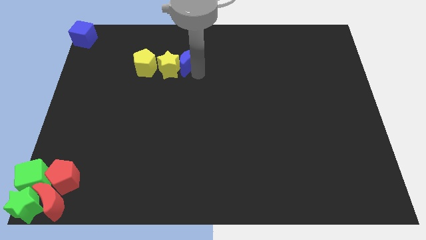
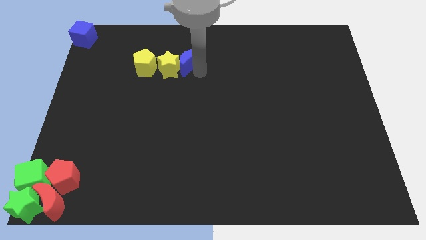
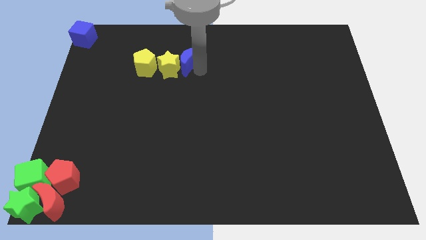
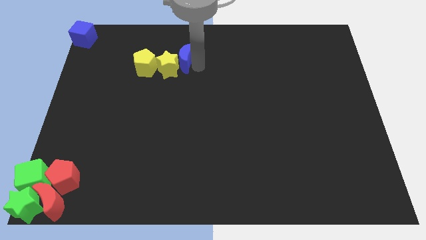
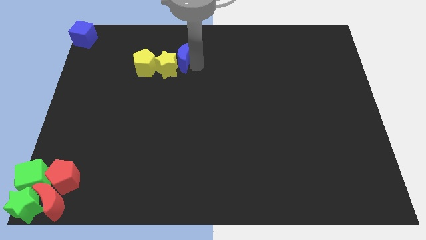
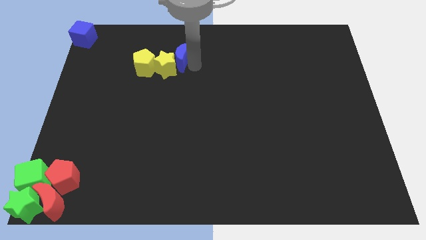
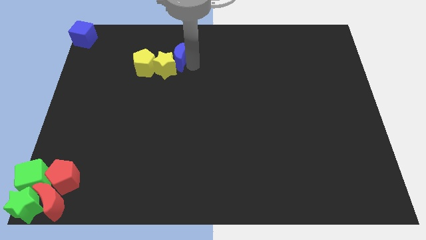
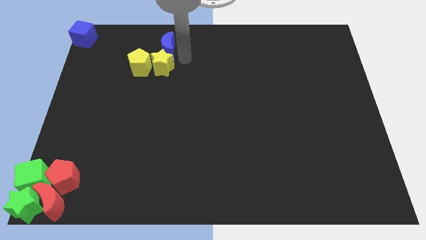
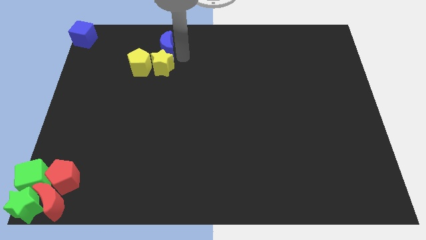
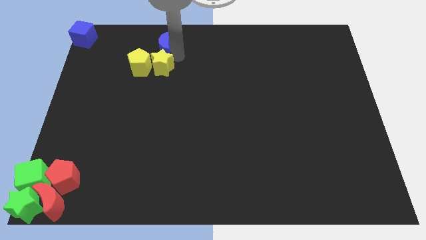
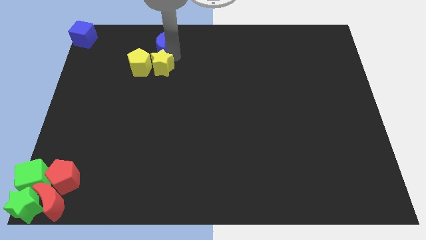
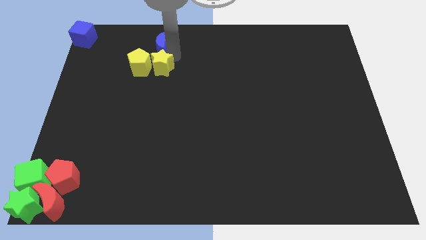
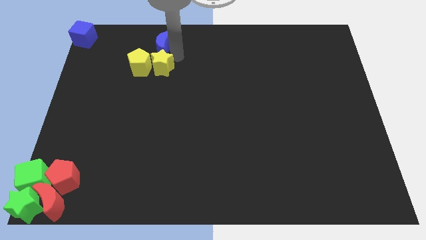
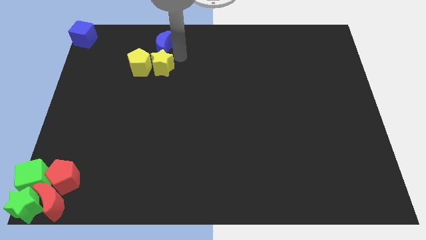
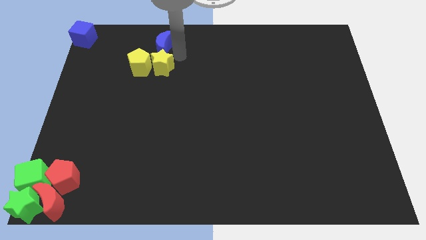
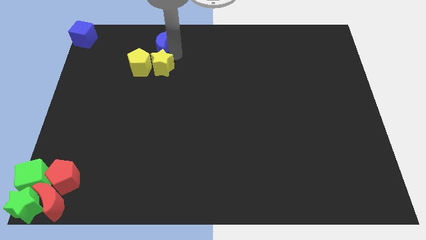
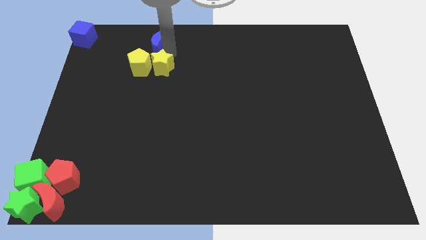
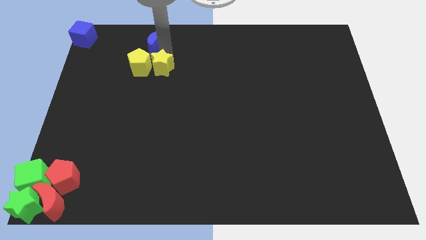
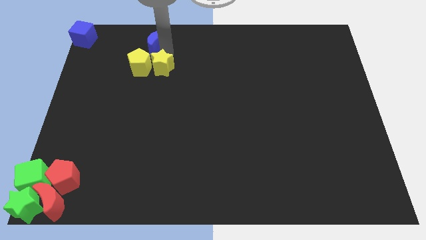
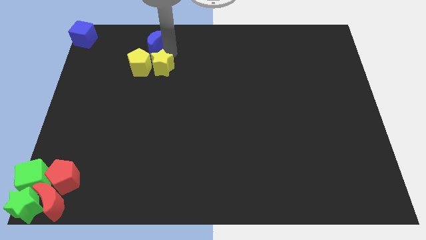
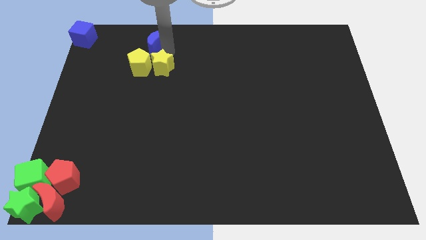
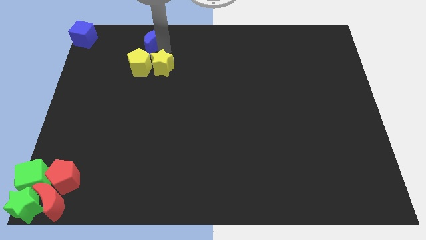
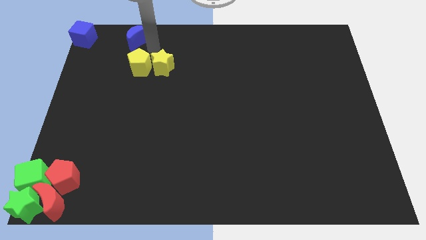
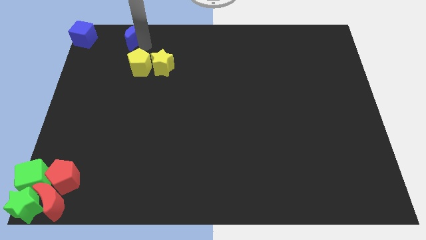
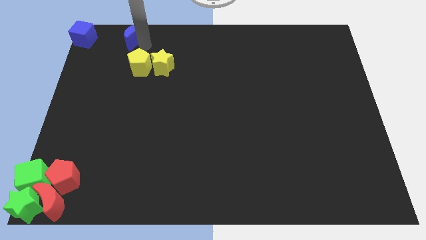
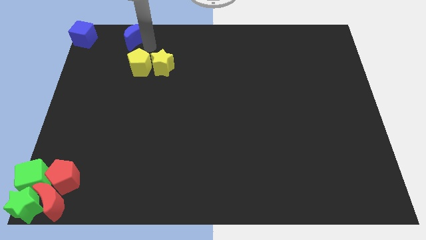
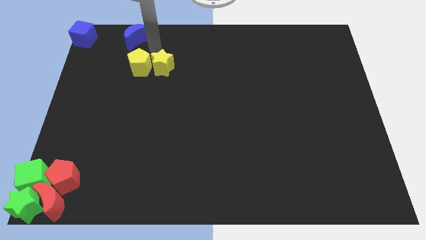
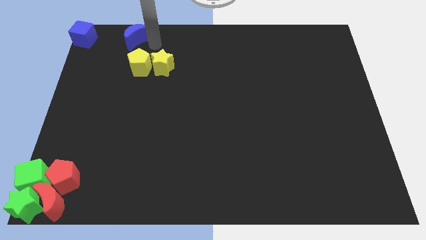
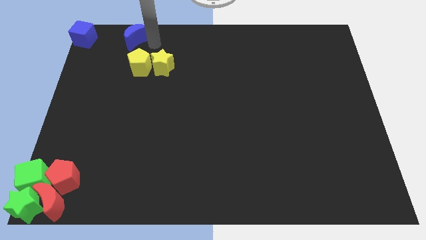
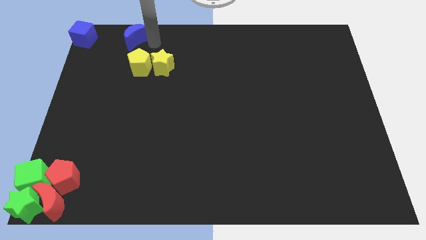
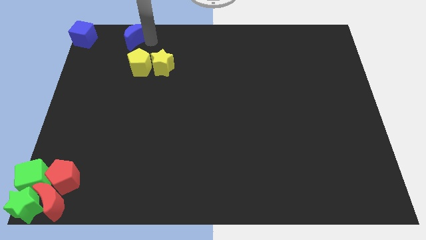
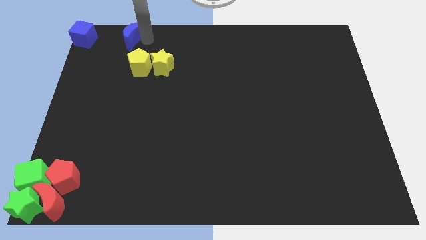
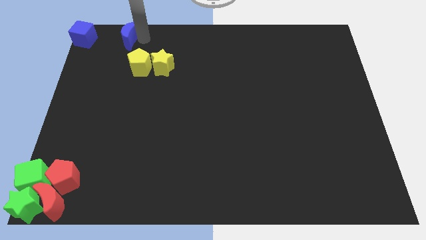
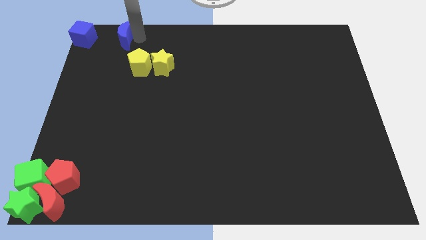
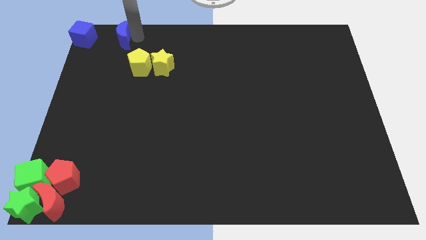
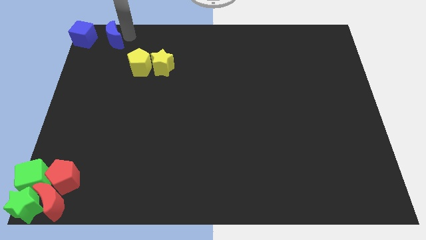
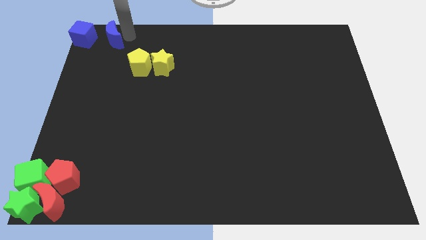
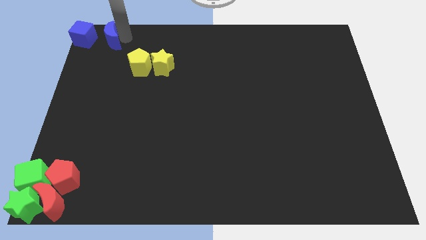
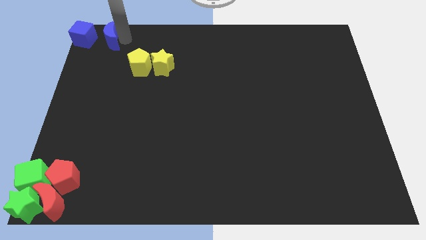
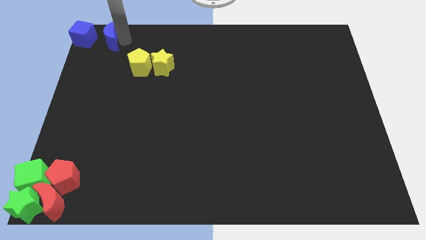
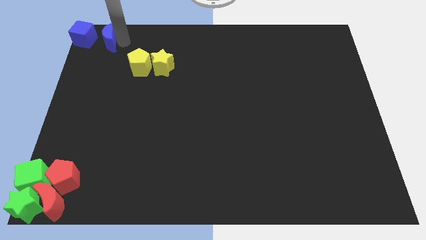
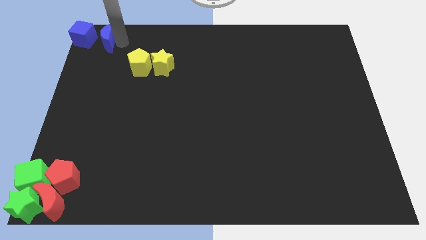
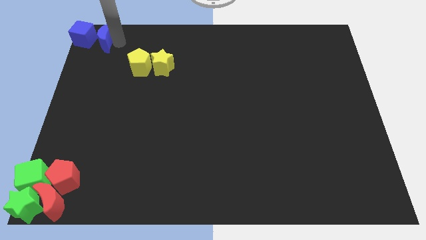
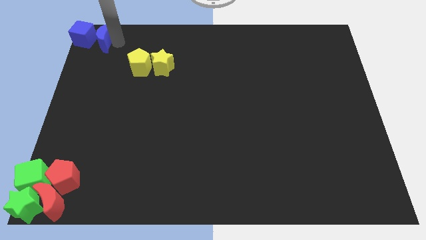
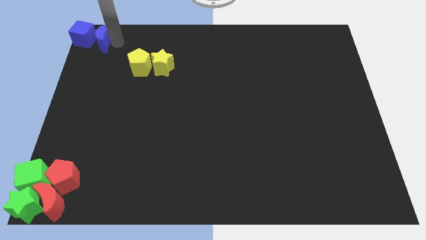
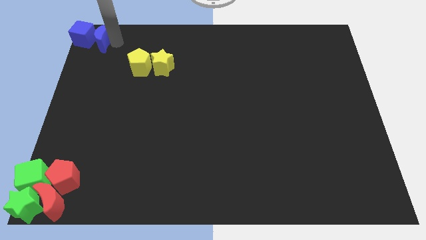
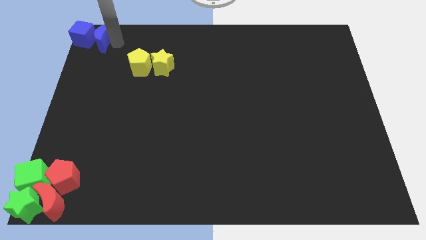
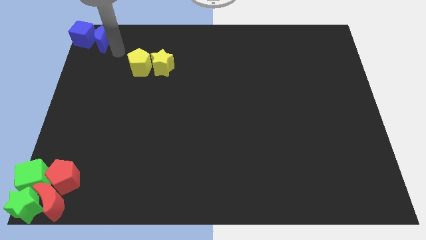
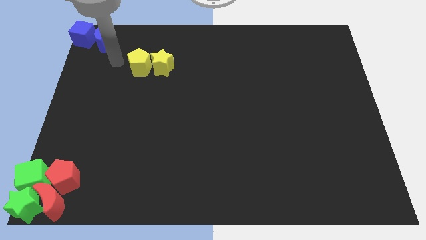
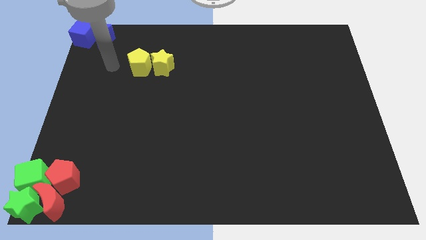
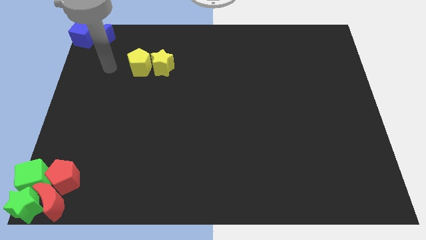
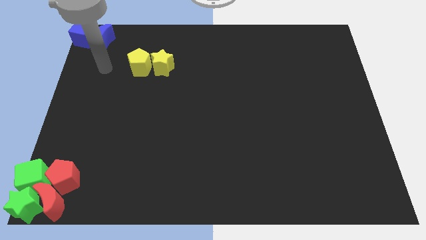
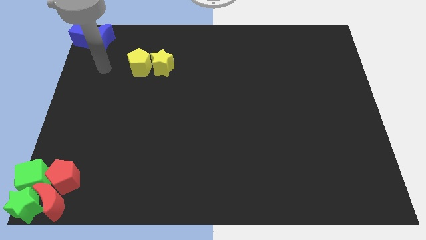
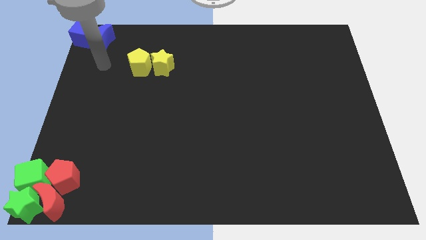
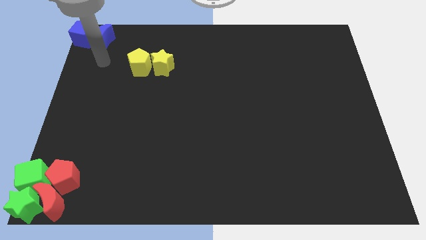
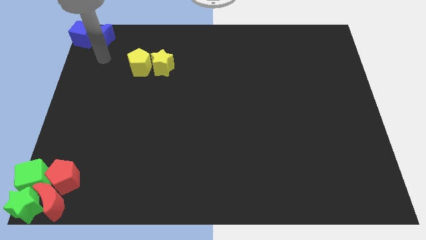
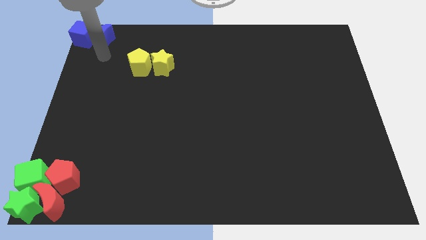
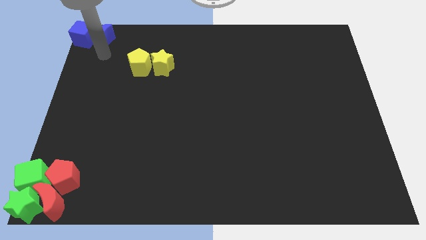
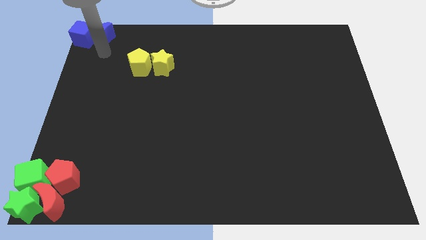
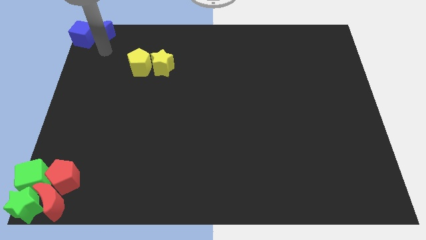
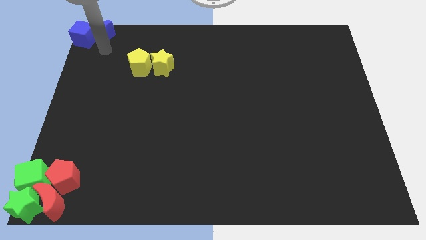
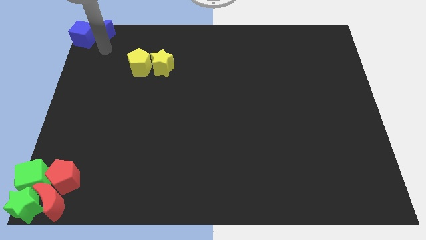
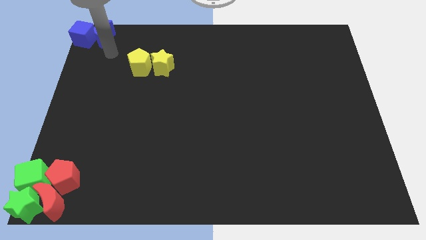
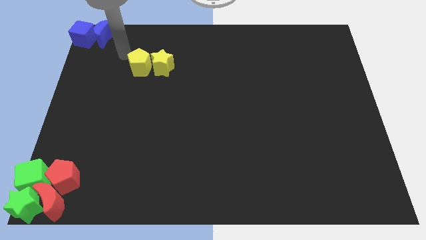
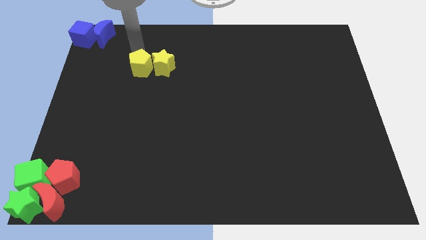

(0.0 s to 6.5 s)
move the blue moon to the top left corner of the board

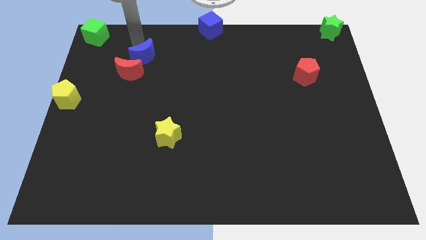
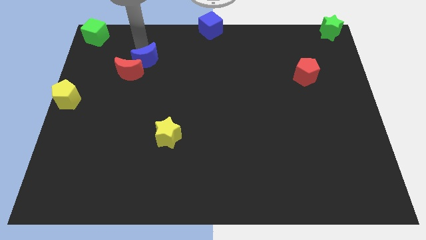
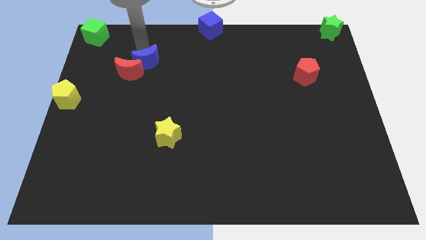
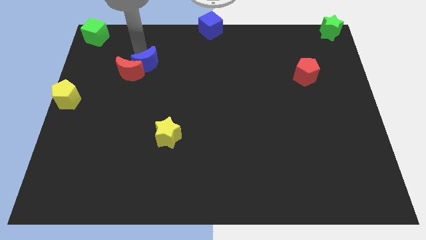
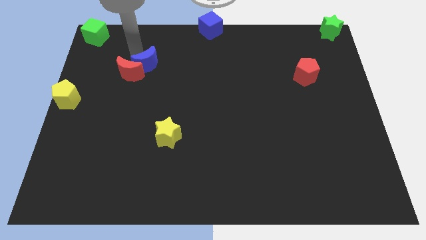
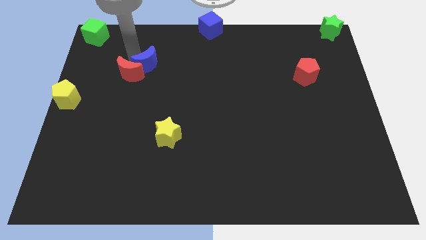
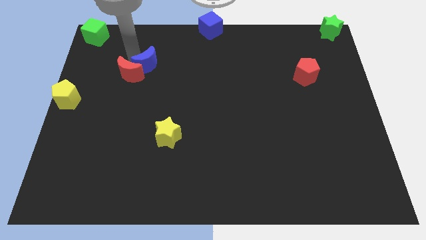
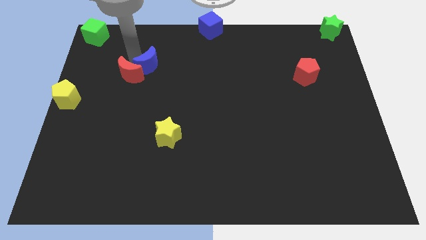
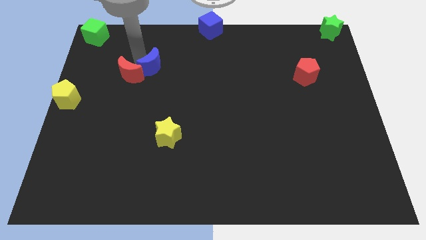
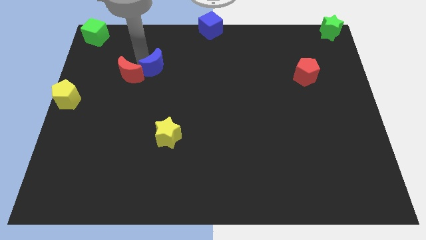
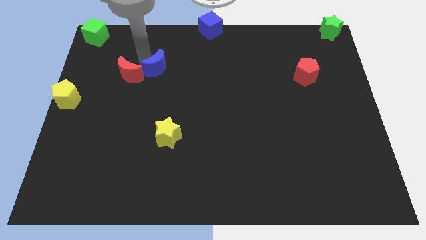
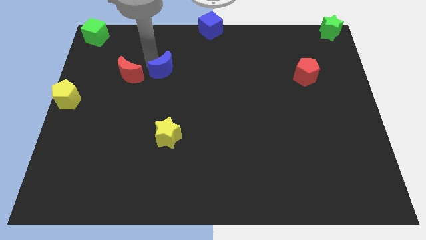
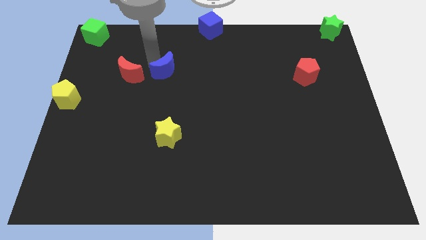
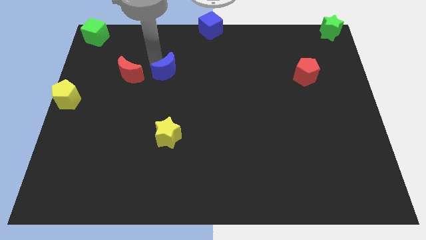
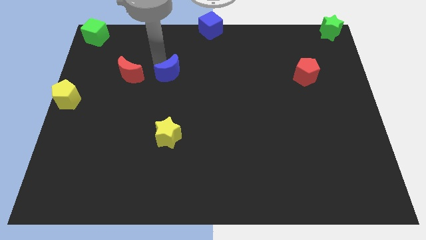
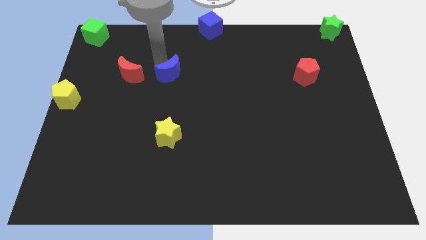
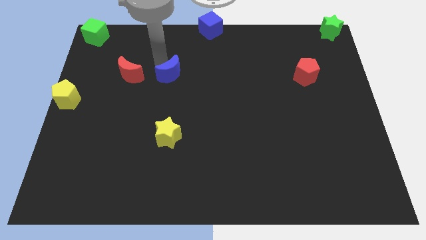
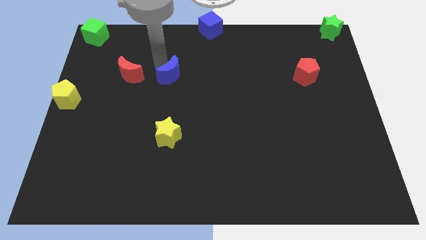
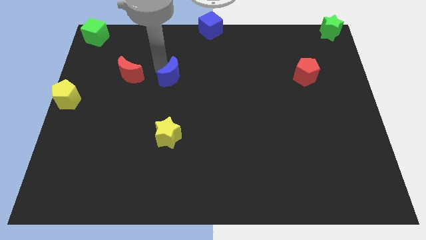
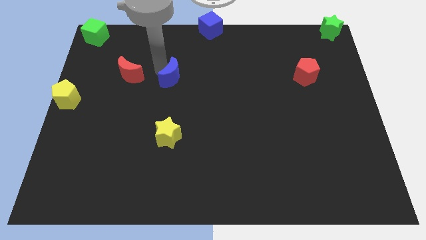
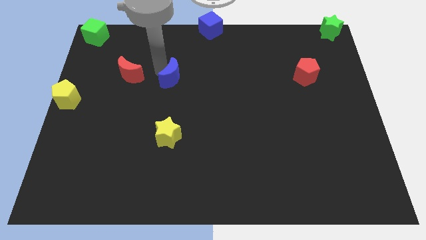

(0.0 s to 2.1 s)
place blue moon to the right of red moon

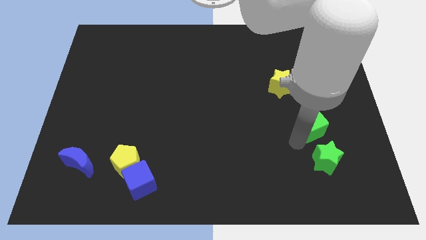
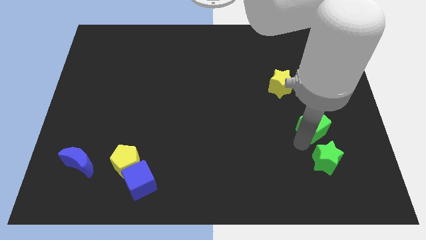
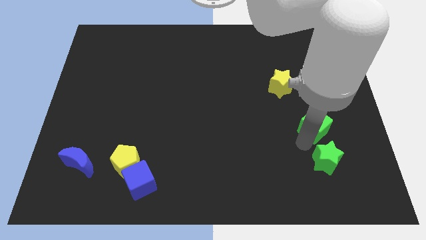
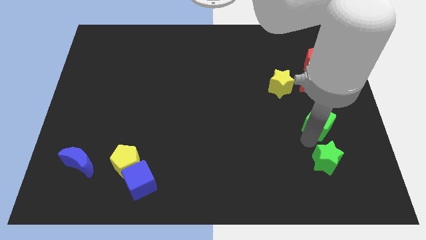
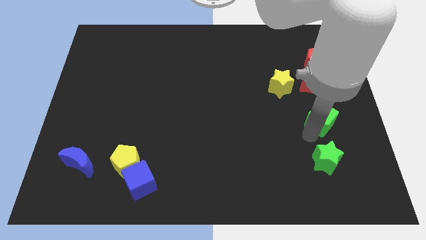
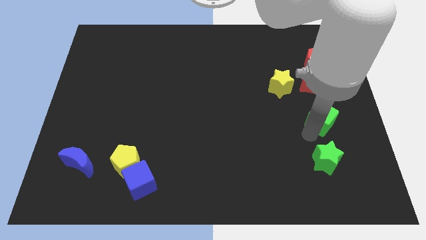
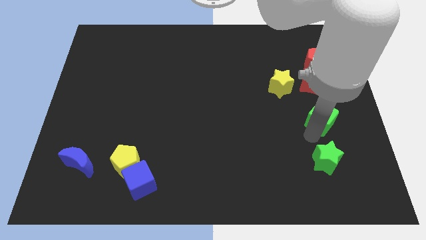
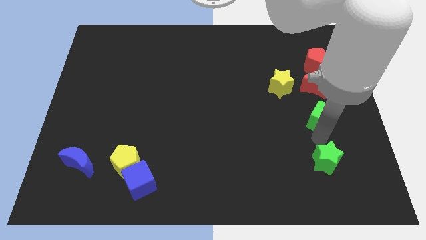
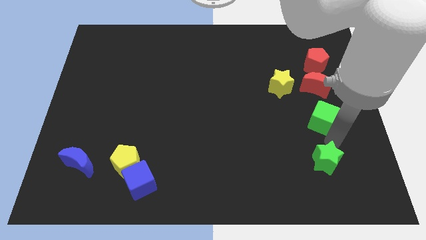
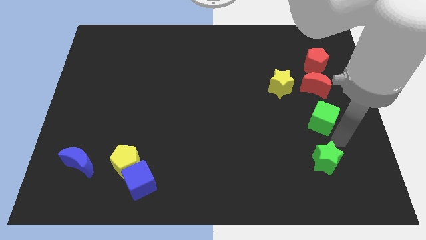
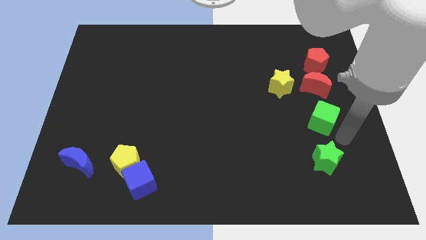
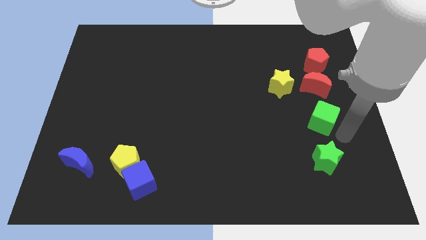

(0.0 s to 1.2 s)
place the green cube above the green star
